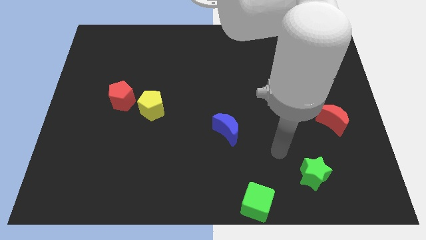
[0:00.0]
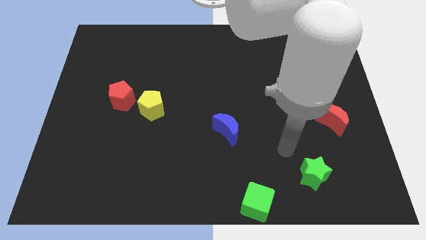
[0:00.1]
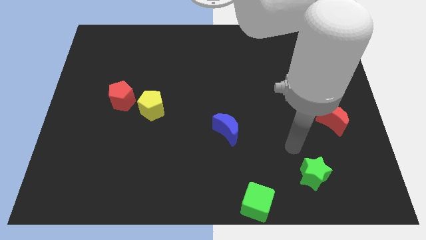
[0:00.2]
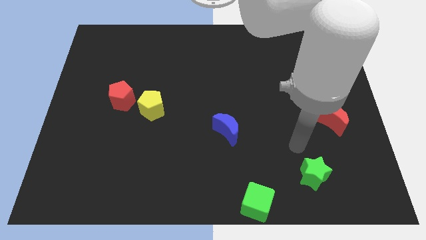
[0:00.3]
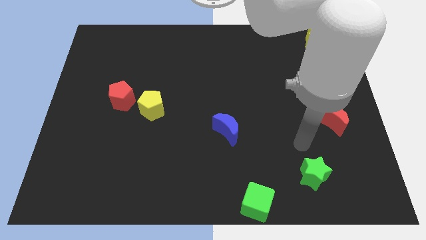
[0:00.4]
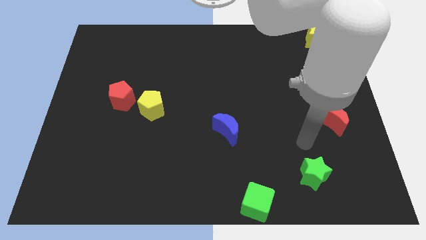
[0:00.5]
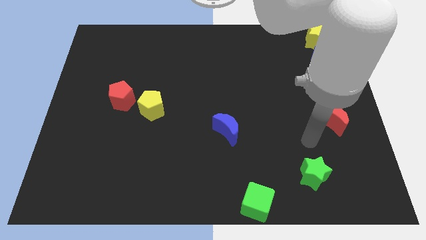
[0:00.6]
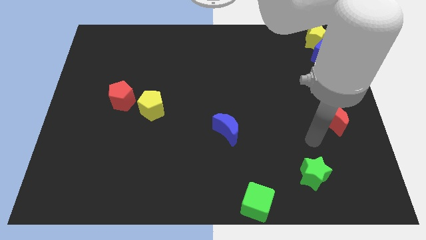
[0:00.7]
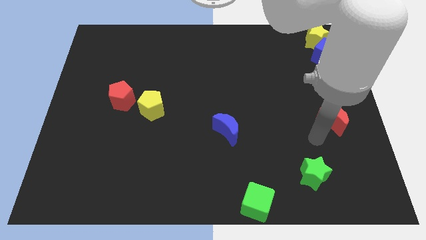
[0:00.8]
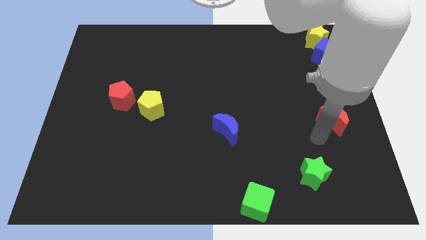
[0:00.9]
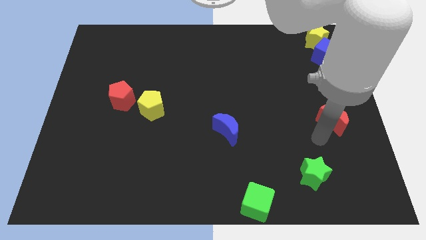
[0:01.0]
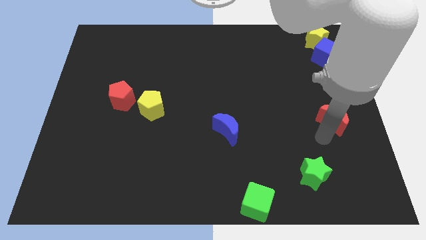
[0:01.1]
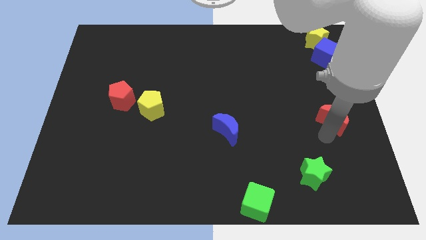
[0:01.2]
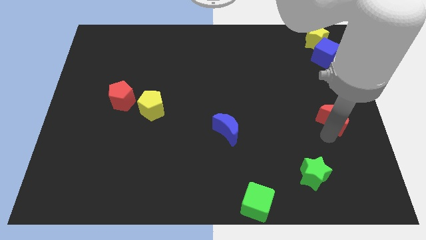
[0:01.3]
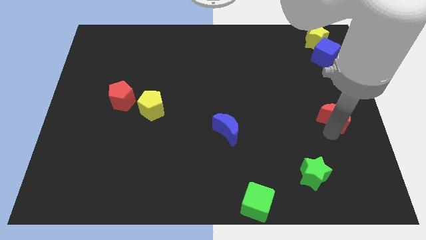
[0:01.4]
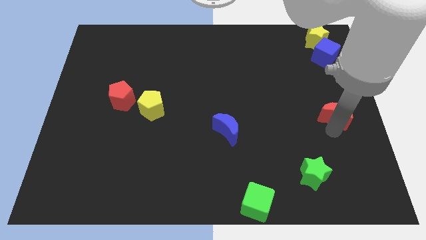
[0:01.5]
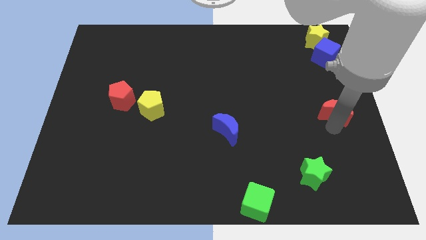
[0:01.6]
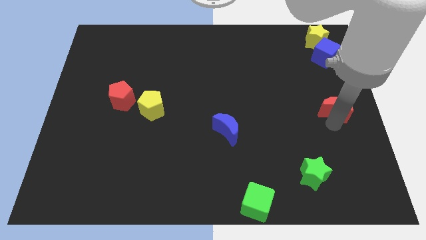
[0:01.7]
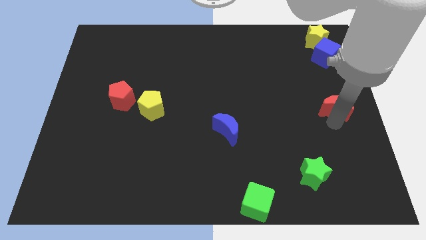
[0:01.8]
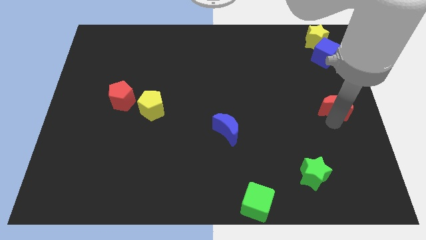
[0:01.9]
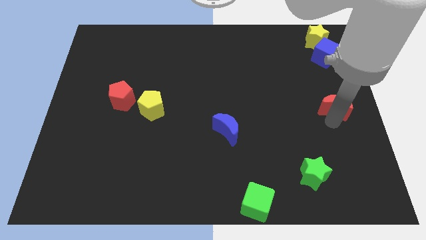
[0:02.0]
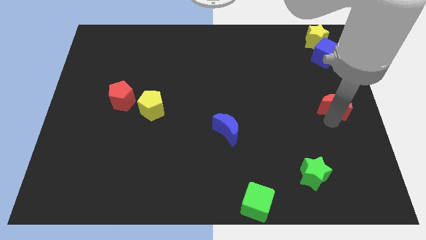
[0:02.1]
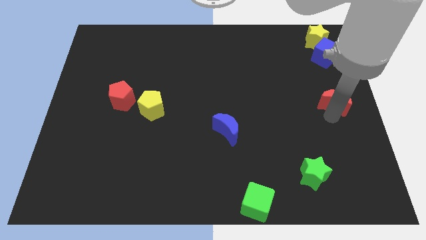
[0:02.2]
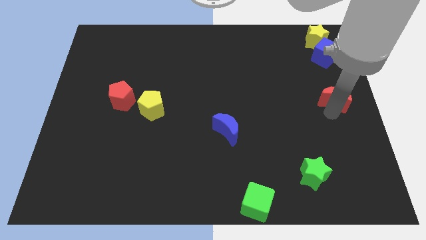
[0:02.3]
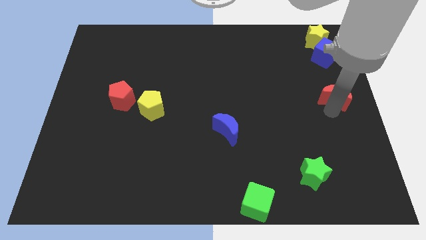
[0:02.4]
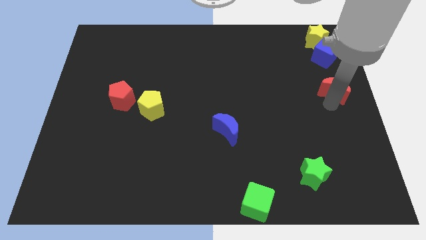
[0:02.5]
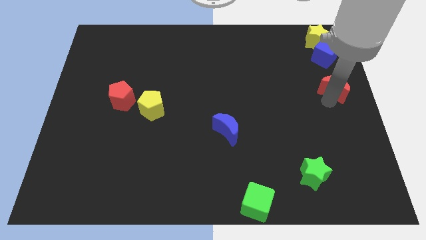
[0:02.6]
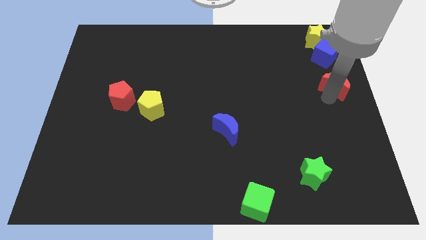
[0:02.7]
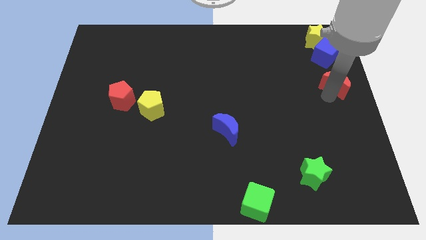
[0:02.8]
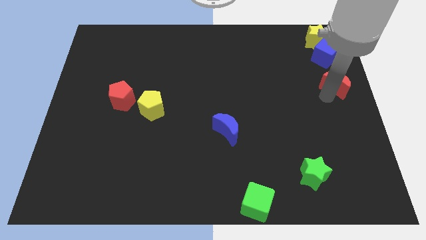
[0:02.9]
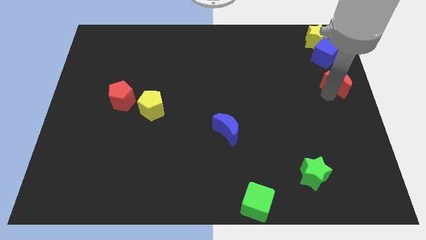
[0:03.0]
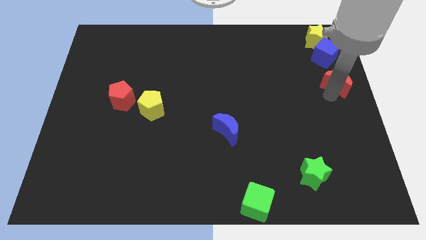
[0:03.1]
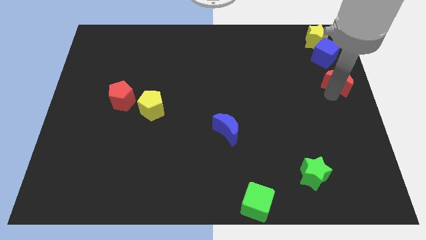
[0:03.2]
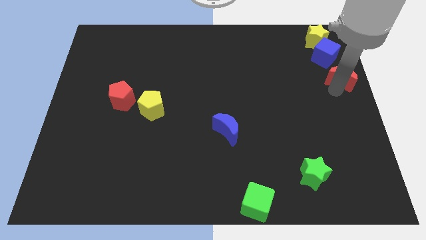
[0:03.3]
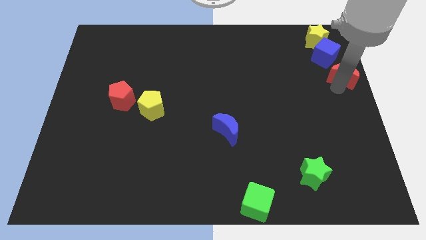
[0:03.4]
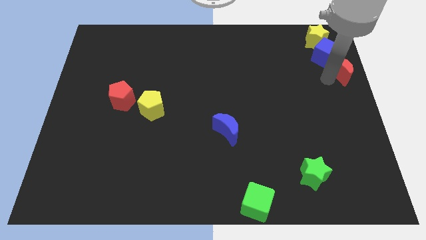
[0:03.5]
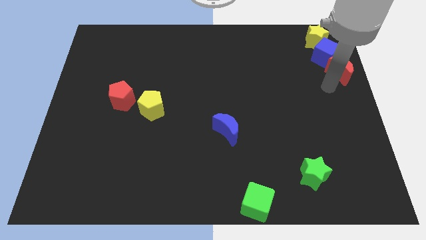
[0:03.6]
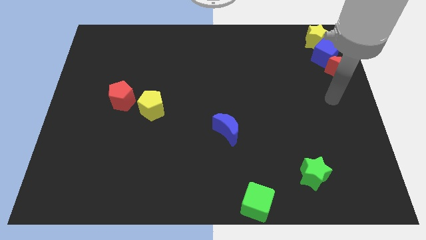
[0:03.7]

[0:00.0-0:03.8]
push the red moon below the blue cube

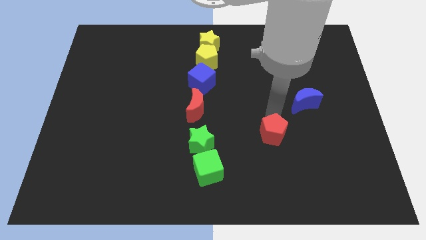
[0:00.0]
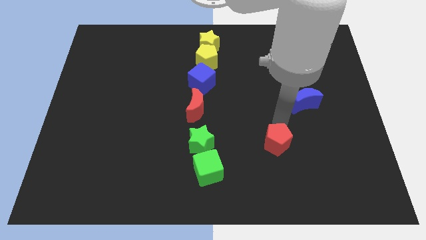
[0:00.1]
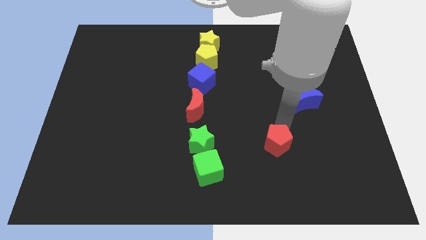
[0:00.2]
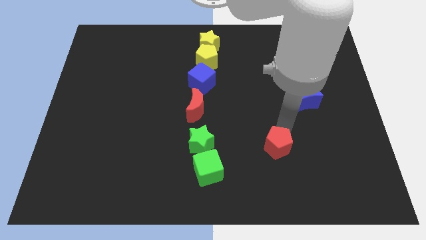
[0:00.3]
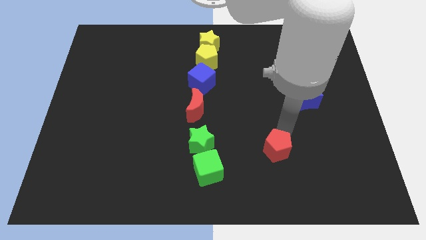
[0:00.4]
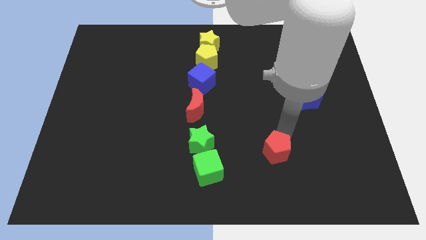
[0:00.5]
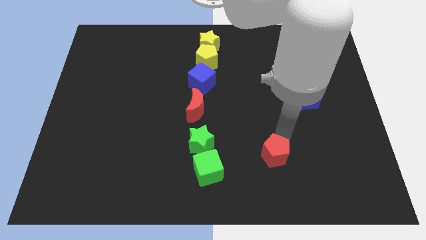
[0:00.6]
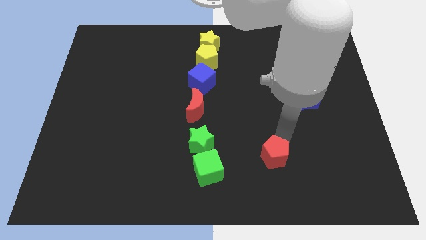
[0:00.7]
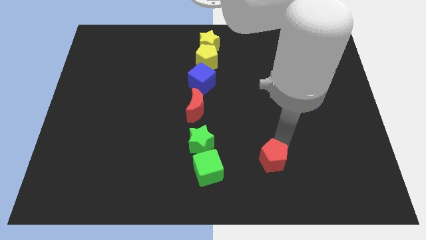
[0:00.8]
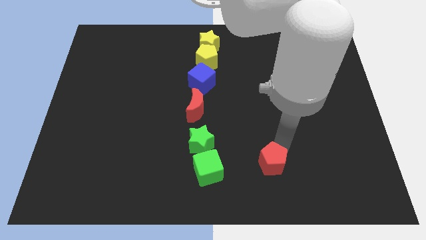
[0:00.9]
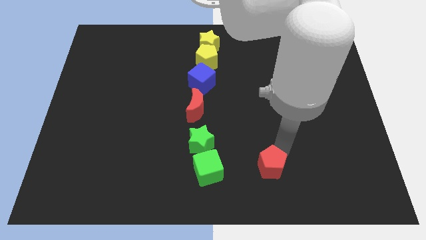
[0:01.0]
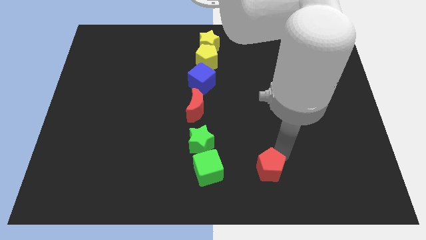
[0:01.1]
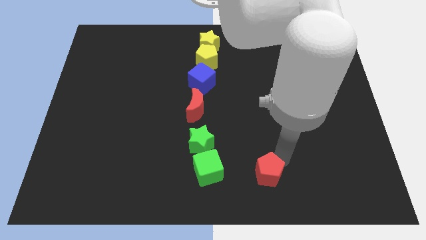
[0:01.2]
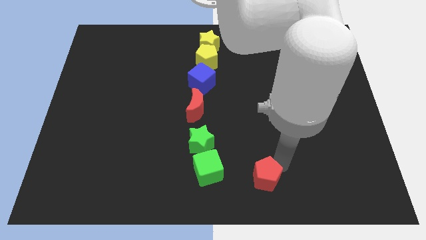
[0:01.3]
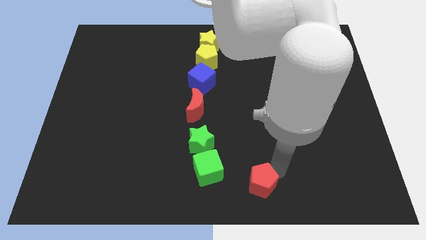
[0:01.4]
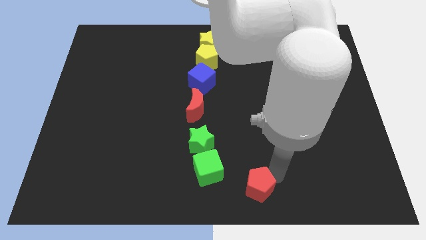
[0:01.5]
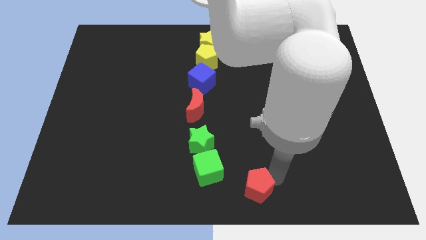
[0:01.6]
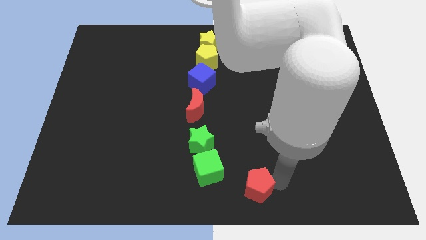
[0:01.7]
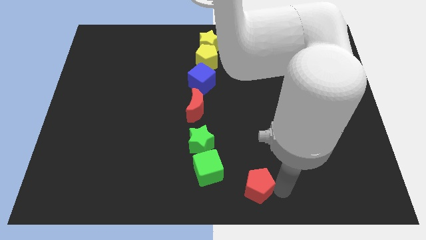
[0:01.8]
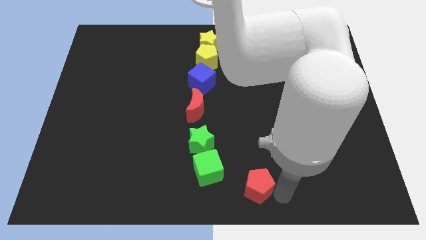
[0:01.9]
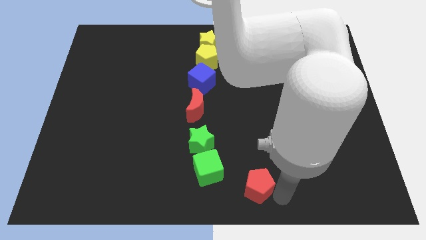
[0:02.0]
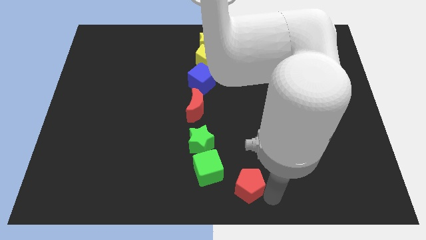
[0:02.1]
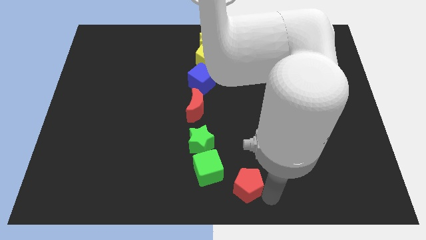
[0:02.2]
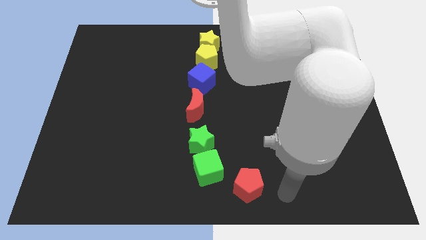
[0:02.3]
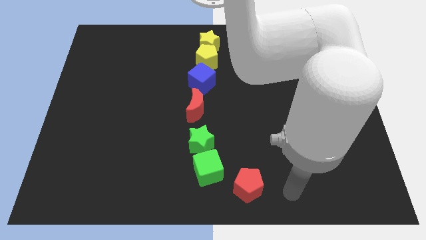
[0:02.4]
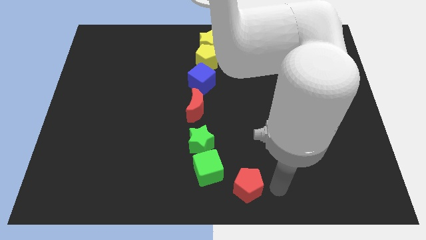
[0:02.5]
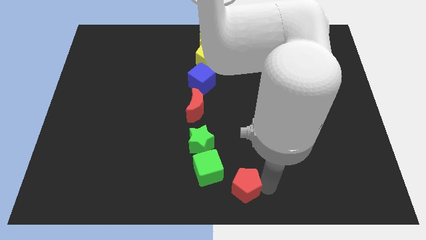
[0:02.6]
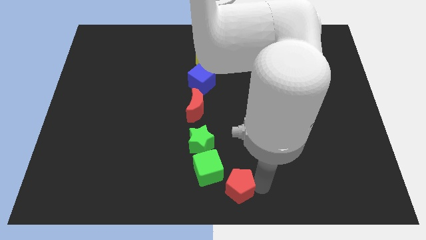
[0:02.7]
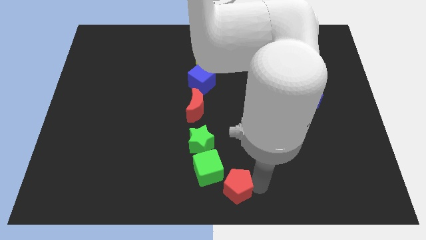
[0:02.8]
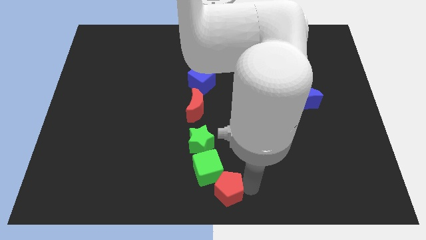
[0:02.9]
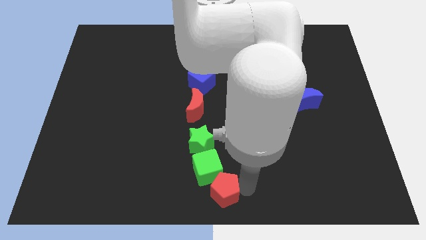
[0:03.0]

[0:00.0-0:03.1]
slide the red pentagon diagonally bottom right to the green cube

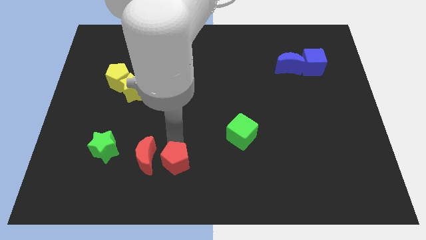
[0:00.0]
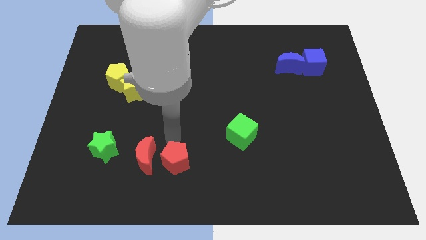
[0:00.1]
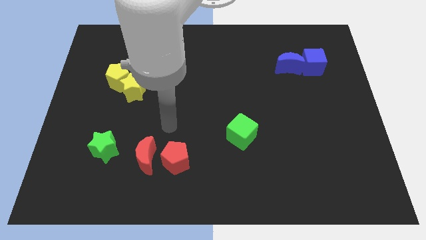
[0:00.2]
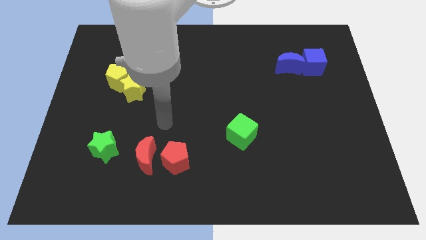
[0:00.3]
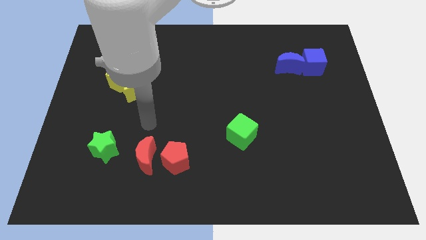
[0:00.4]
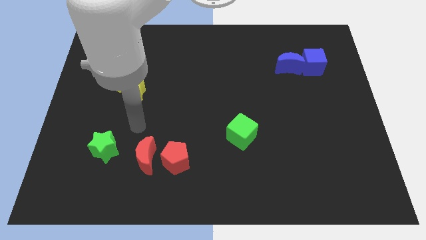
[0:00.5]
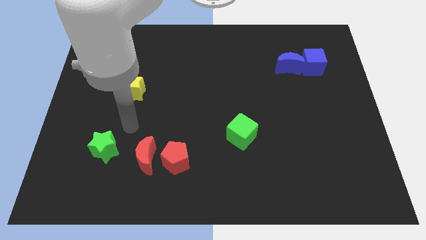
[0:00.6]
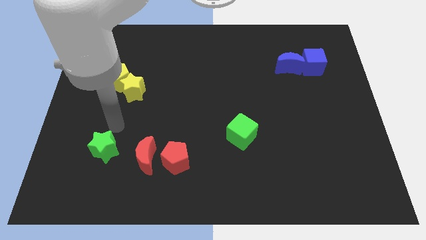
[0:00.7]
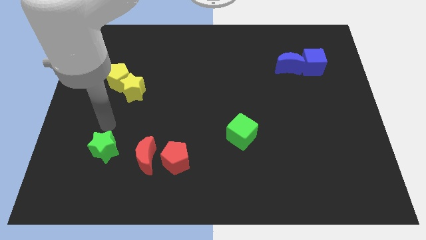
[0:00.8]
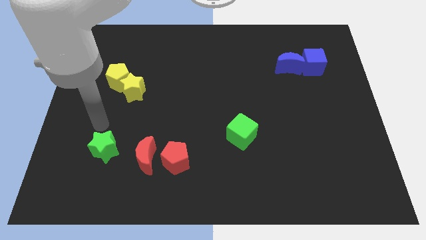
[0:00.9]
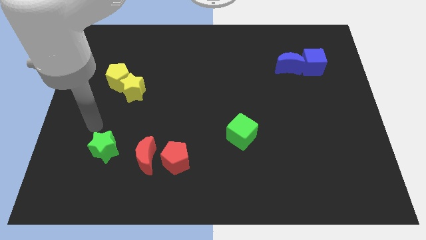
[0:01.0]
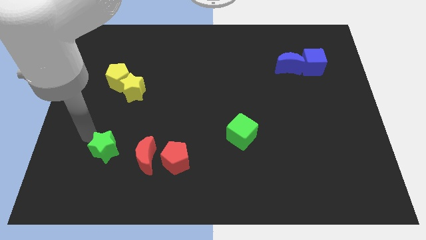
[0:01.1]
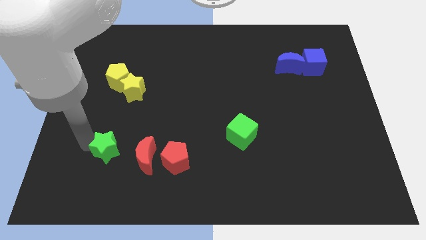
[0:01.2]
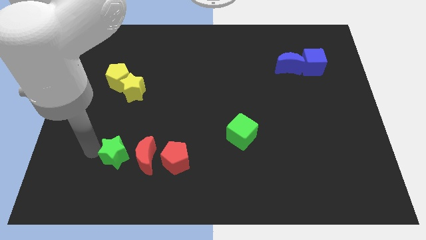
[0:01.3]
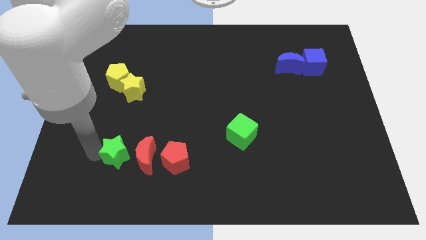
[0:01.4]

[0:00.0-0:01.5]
move the green star to the right of the red crescent

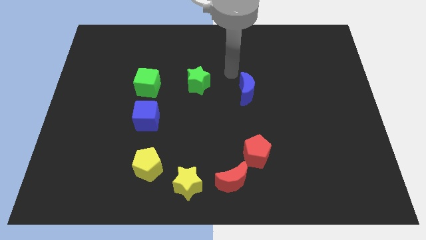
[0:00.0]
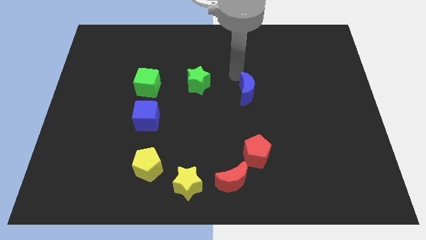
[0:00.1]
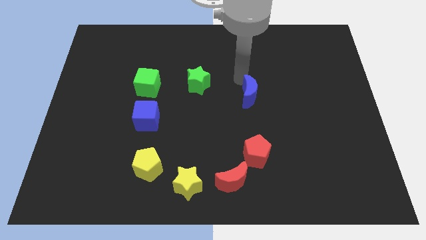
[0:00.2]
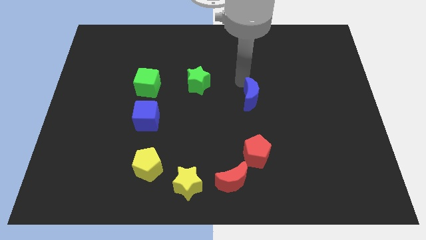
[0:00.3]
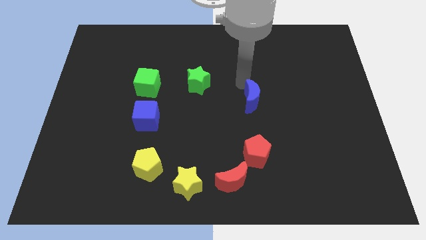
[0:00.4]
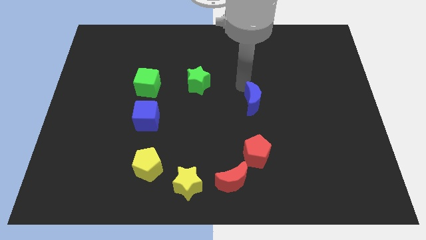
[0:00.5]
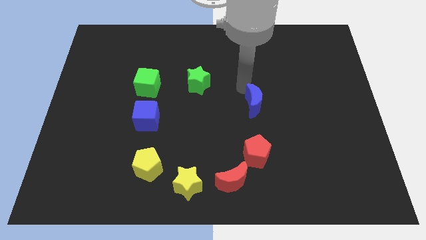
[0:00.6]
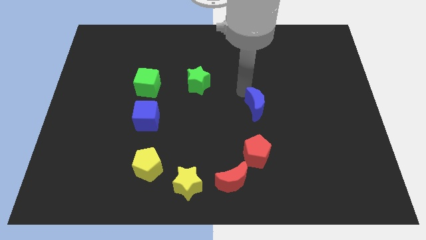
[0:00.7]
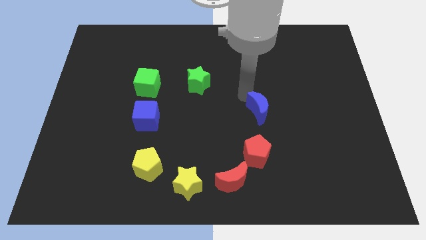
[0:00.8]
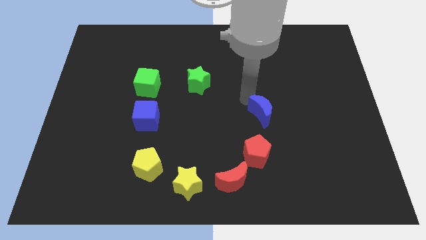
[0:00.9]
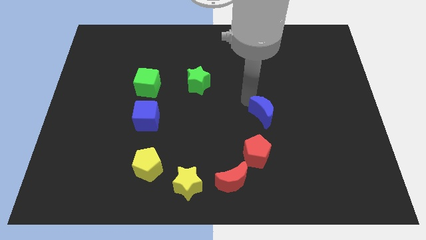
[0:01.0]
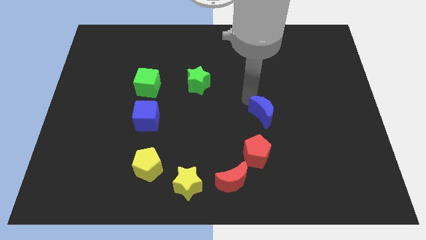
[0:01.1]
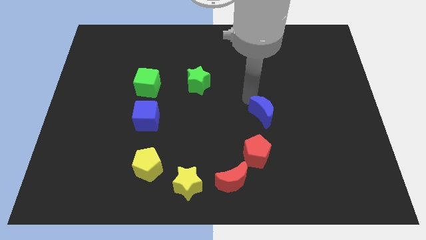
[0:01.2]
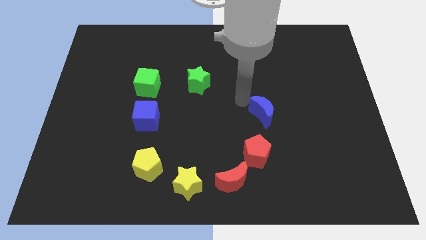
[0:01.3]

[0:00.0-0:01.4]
move the blue moon to the center
